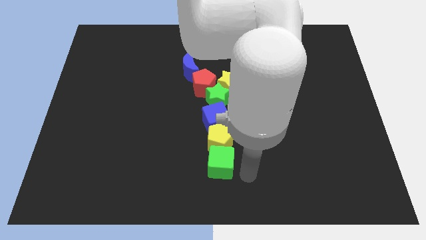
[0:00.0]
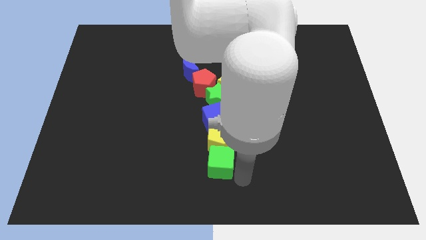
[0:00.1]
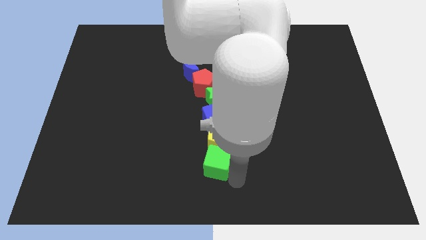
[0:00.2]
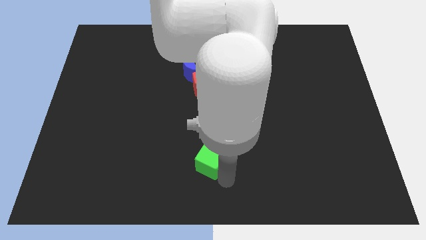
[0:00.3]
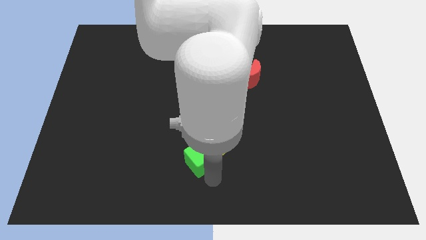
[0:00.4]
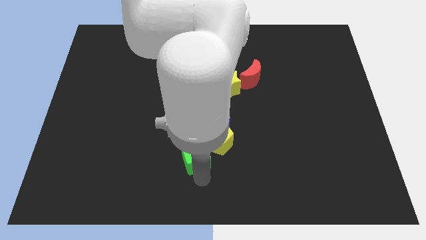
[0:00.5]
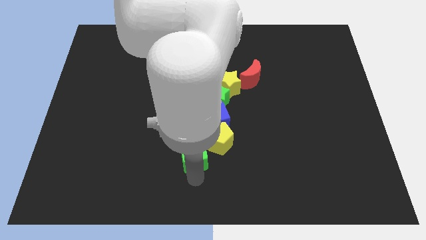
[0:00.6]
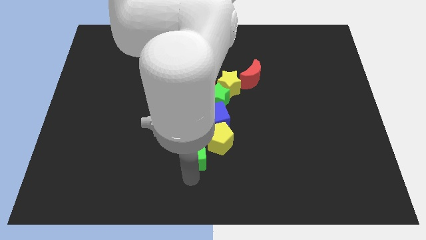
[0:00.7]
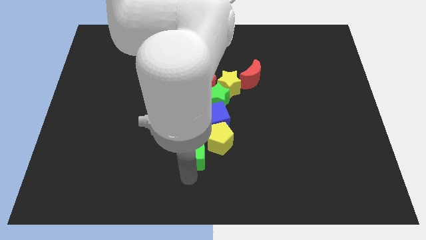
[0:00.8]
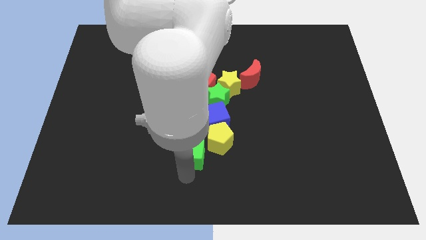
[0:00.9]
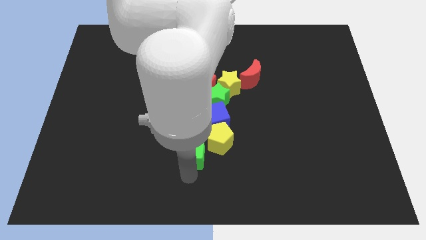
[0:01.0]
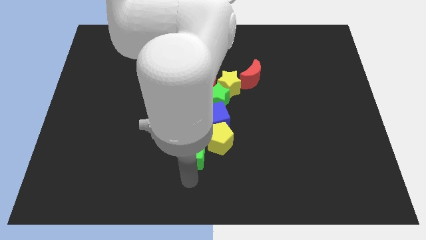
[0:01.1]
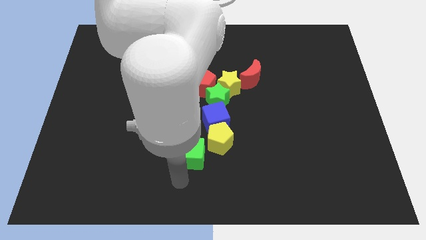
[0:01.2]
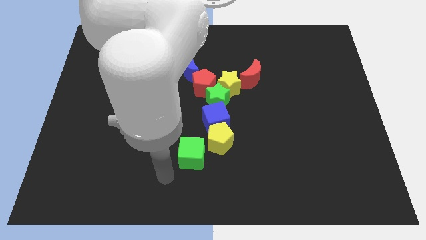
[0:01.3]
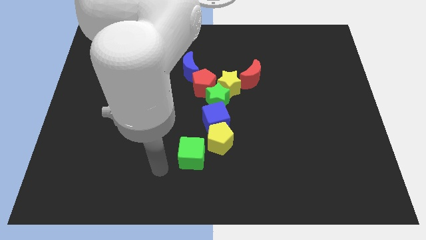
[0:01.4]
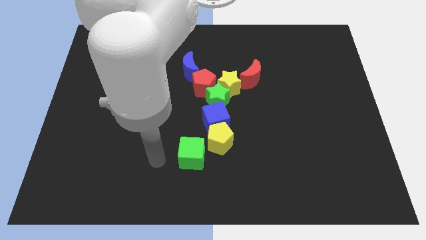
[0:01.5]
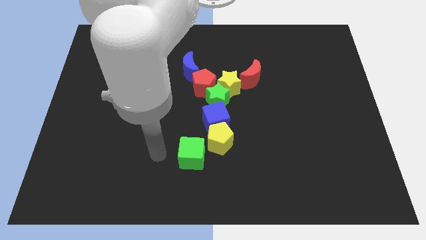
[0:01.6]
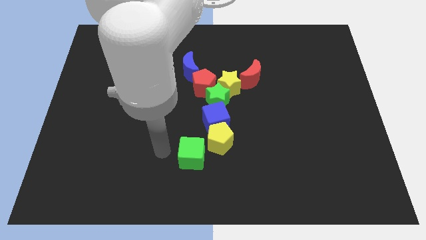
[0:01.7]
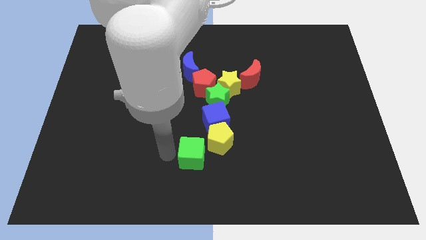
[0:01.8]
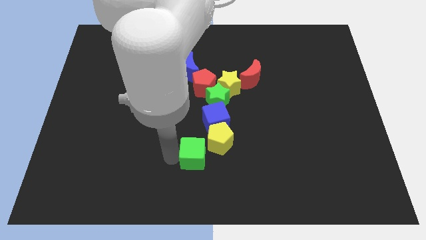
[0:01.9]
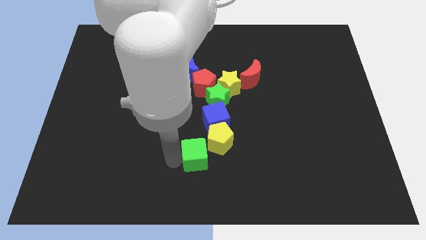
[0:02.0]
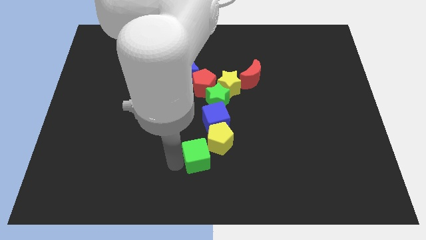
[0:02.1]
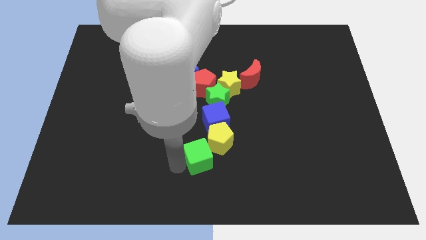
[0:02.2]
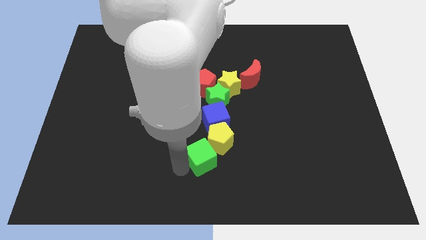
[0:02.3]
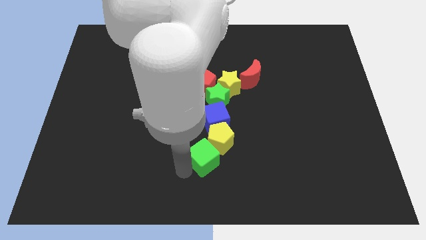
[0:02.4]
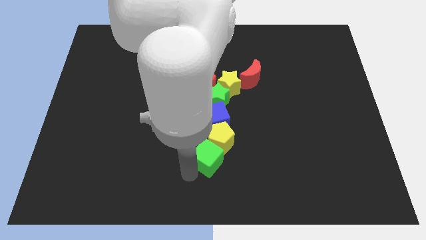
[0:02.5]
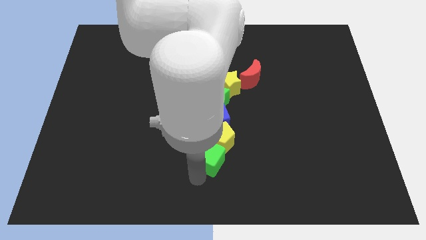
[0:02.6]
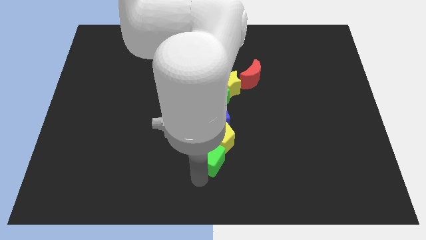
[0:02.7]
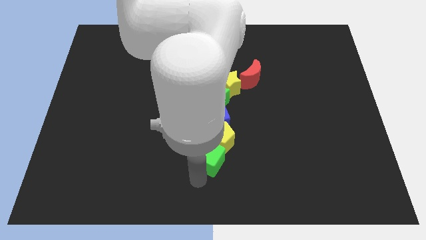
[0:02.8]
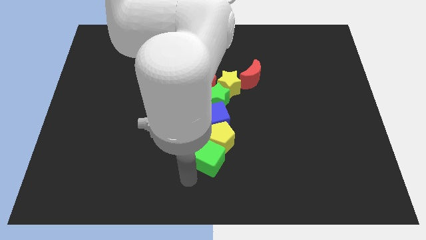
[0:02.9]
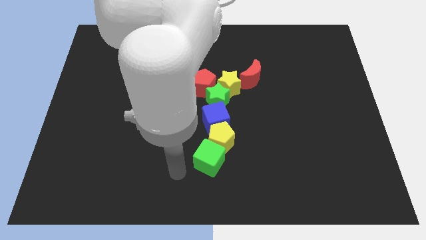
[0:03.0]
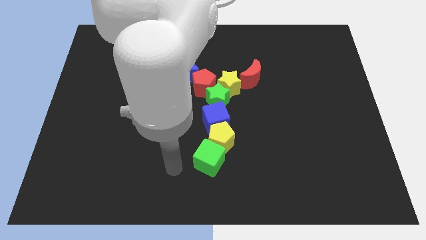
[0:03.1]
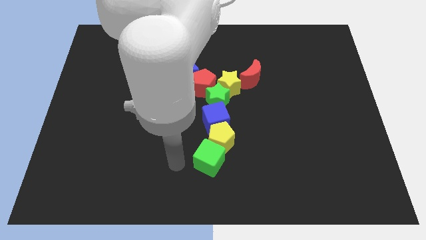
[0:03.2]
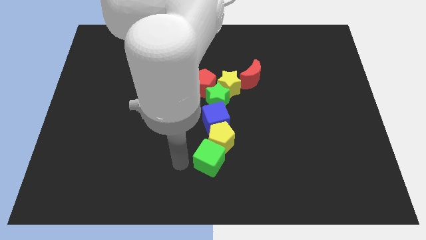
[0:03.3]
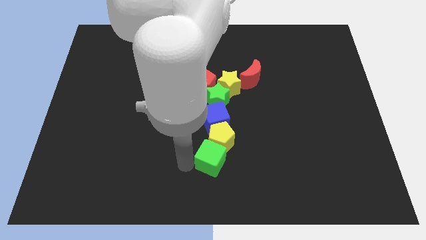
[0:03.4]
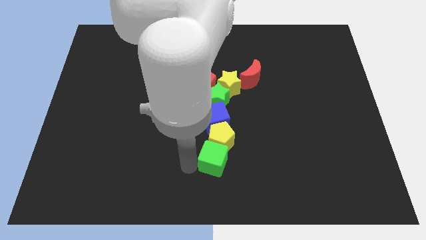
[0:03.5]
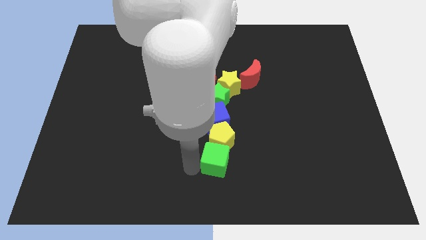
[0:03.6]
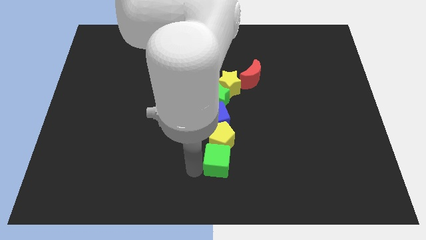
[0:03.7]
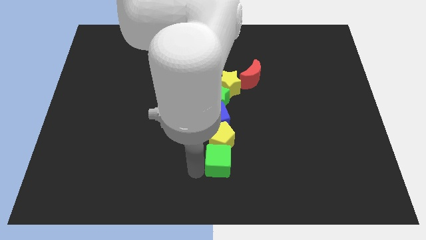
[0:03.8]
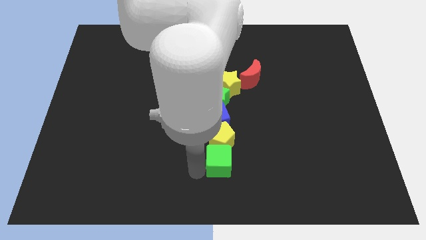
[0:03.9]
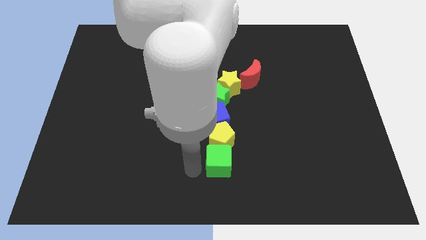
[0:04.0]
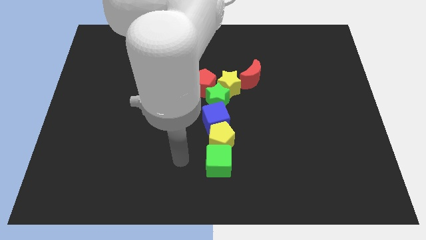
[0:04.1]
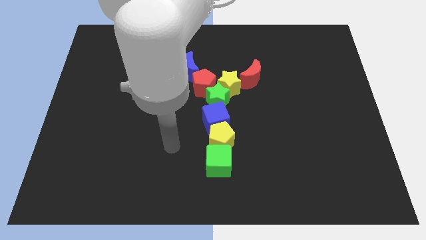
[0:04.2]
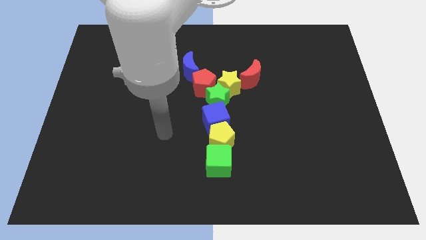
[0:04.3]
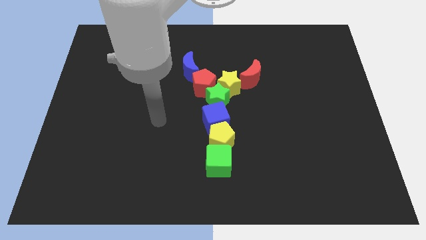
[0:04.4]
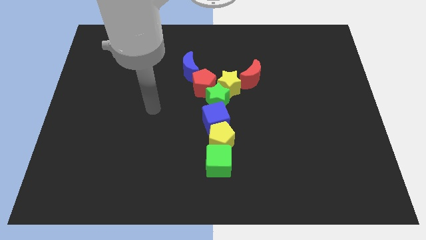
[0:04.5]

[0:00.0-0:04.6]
push green cube to the bottom of yellow pentagon

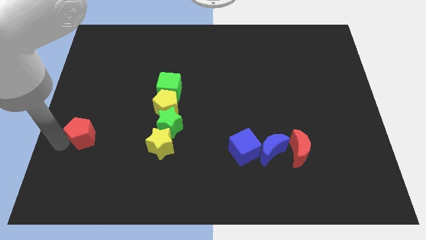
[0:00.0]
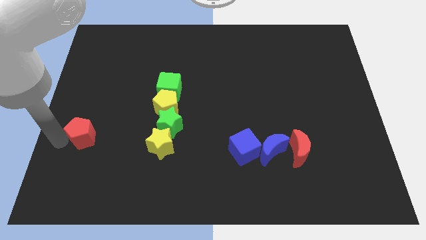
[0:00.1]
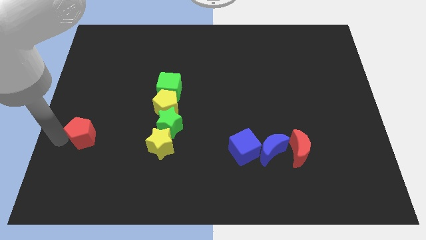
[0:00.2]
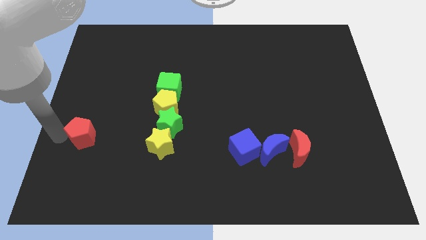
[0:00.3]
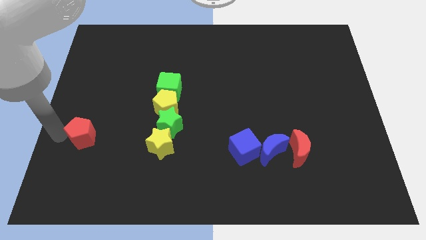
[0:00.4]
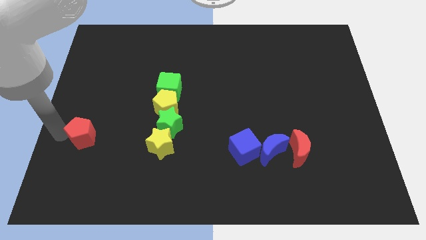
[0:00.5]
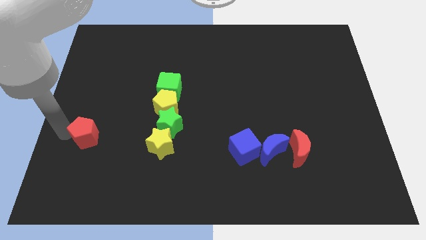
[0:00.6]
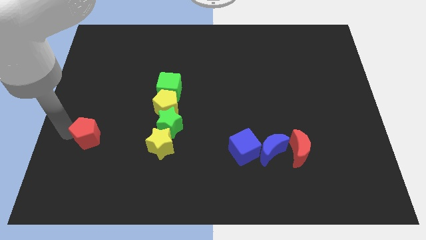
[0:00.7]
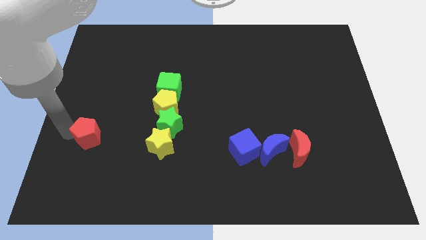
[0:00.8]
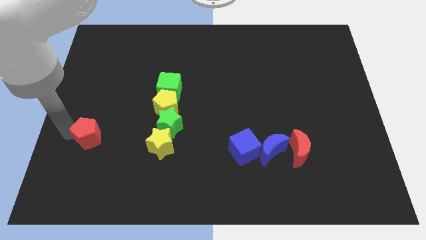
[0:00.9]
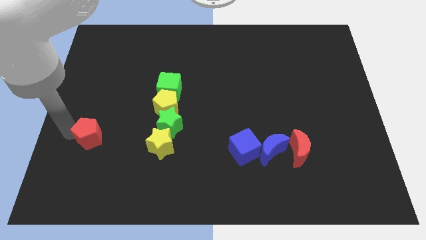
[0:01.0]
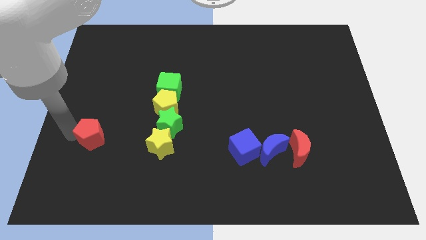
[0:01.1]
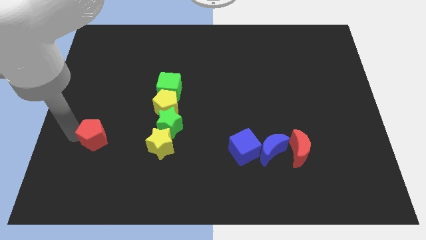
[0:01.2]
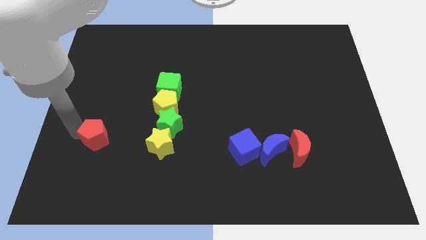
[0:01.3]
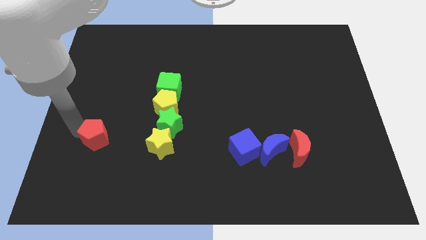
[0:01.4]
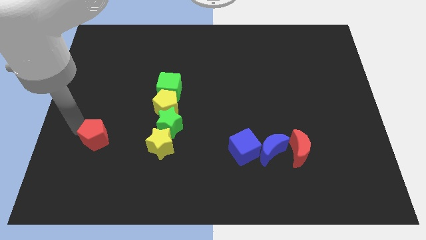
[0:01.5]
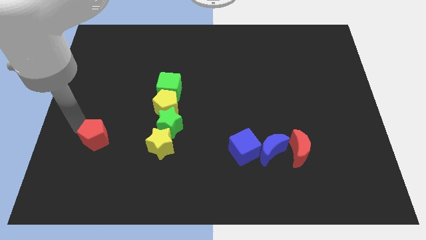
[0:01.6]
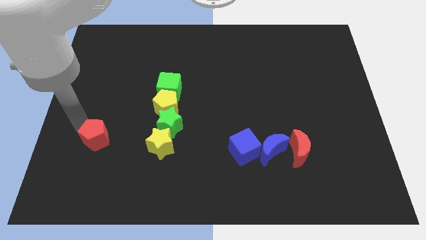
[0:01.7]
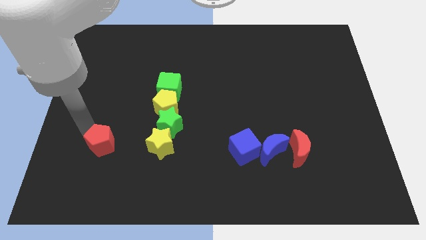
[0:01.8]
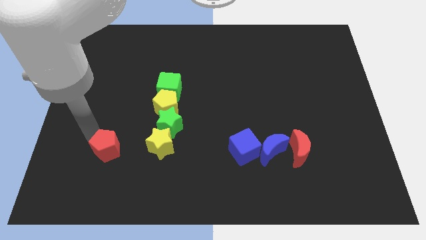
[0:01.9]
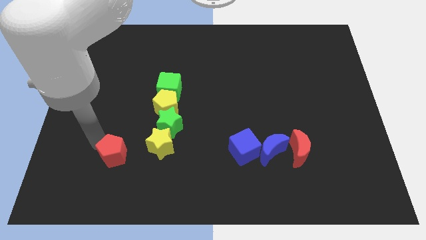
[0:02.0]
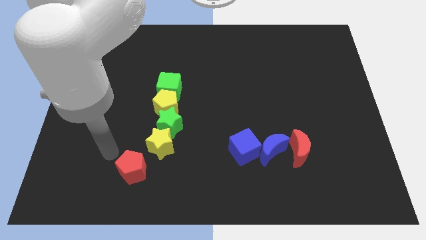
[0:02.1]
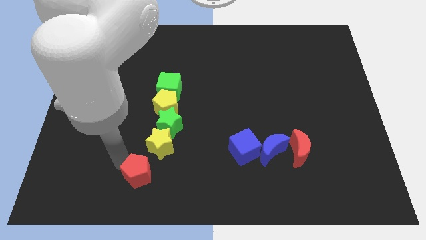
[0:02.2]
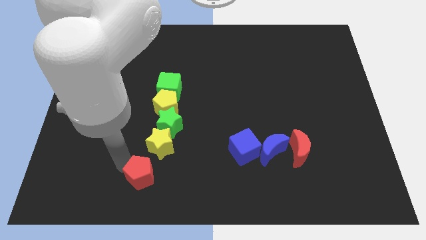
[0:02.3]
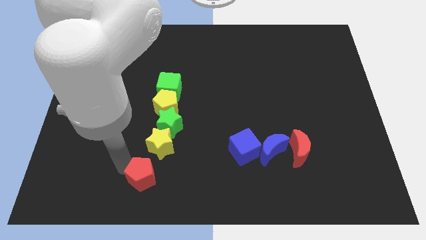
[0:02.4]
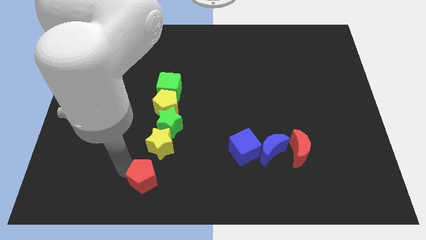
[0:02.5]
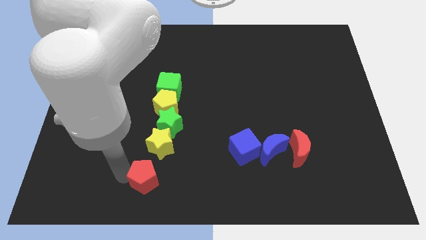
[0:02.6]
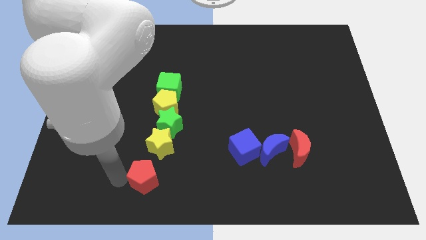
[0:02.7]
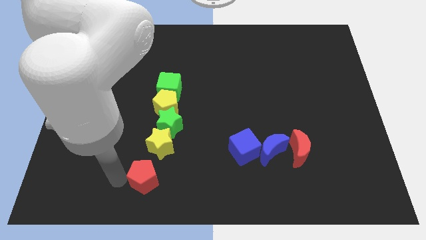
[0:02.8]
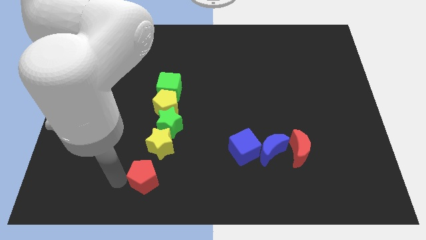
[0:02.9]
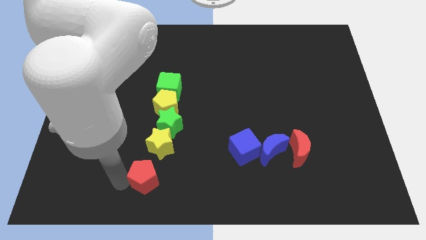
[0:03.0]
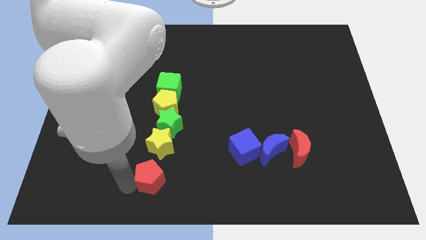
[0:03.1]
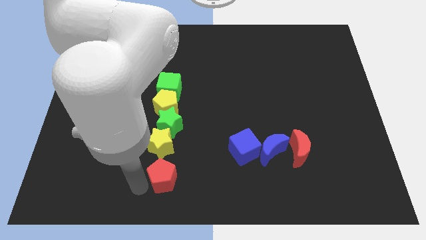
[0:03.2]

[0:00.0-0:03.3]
move the red pentagon below yellow star
